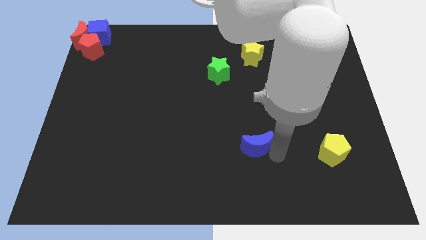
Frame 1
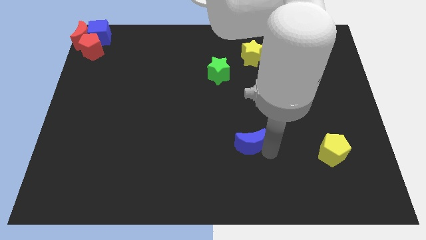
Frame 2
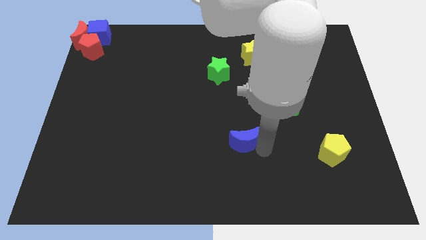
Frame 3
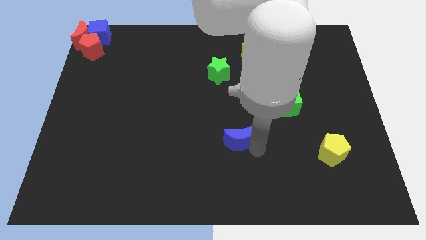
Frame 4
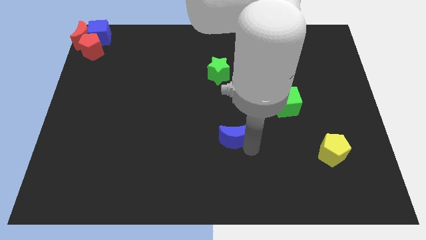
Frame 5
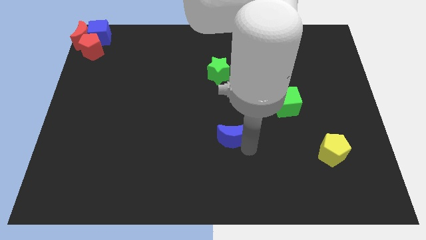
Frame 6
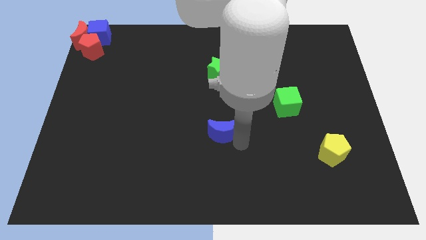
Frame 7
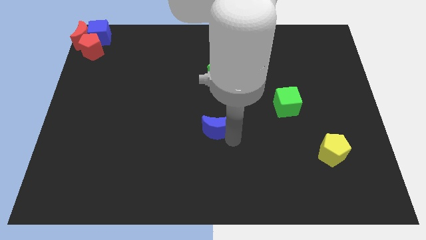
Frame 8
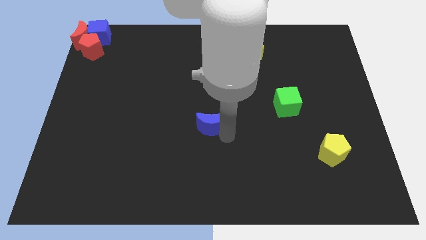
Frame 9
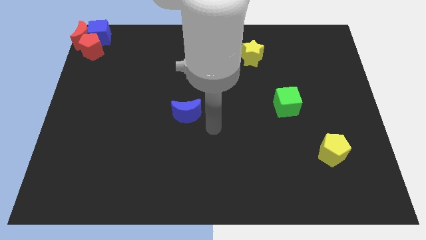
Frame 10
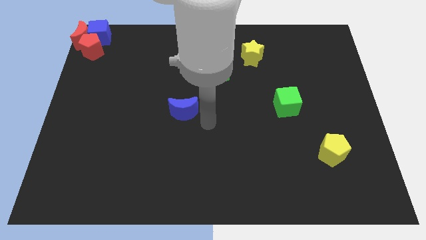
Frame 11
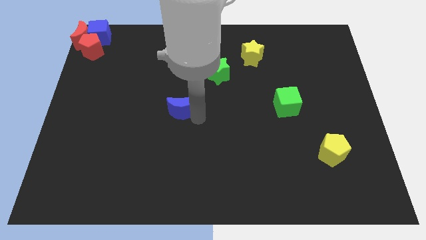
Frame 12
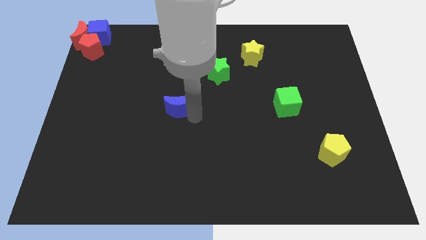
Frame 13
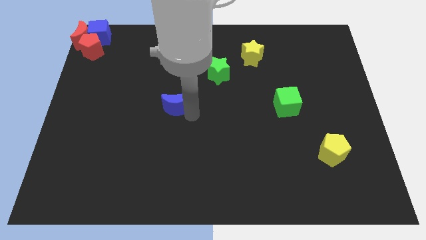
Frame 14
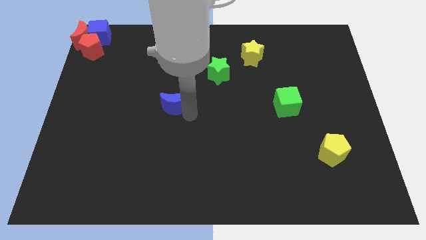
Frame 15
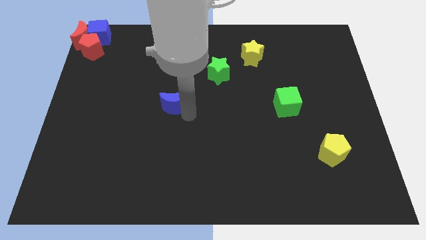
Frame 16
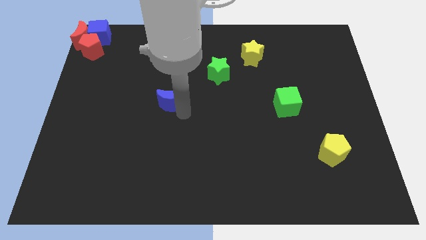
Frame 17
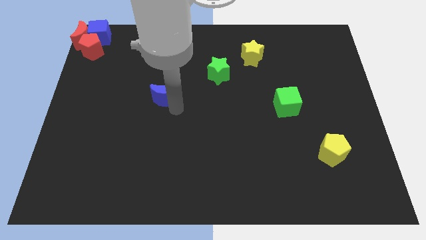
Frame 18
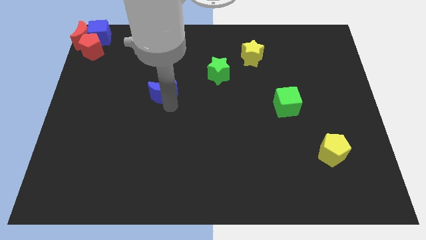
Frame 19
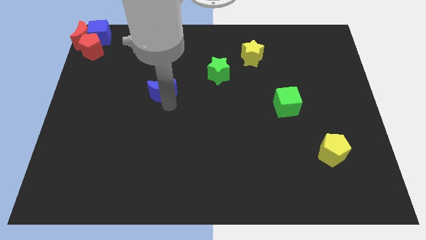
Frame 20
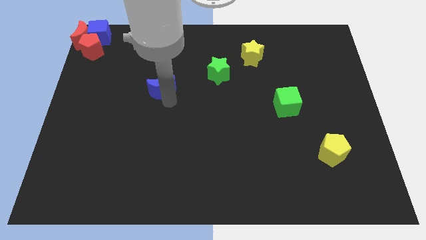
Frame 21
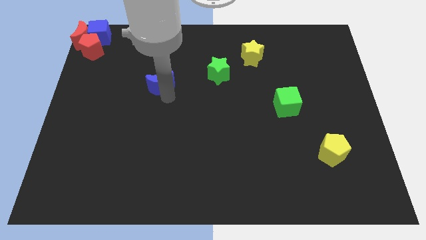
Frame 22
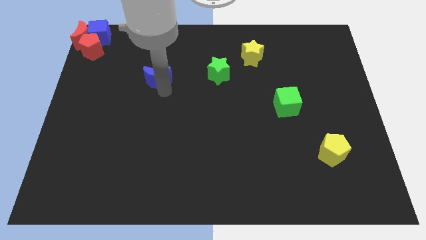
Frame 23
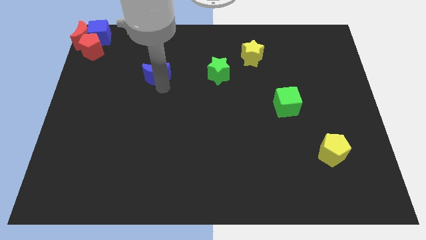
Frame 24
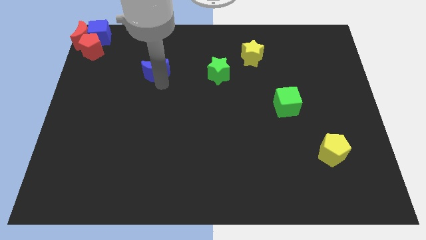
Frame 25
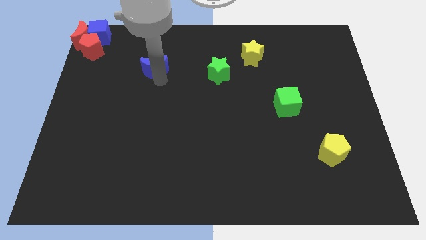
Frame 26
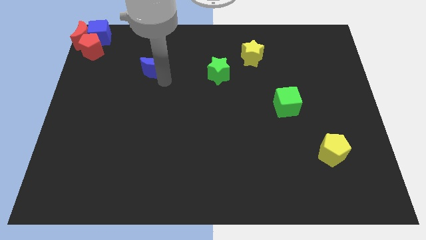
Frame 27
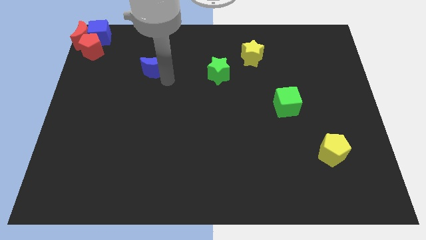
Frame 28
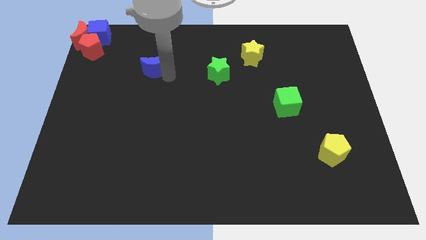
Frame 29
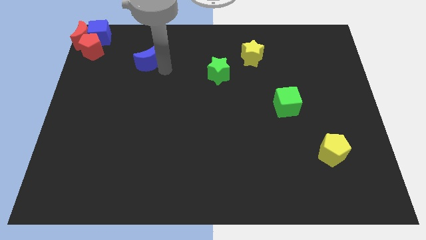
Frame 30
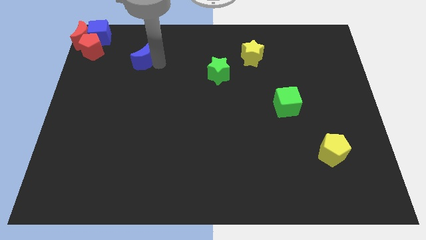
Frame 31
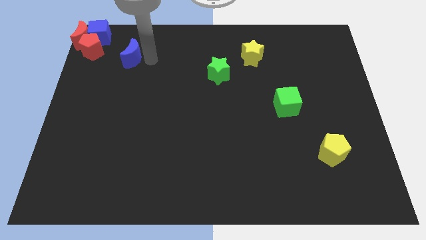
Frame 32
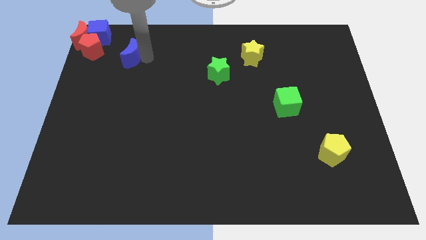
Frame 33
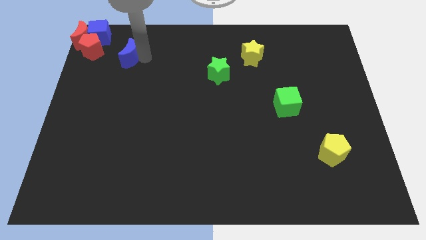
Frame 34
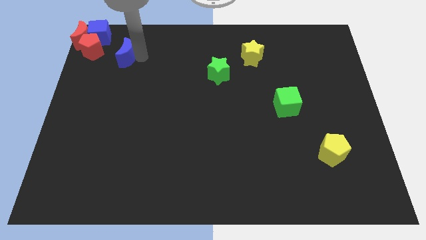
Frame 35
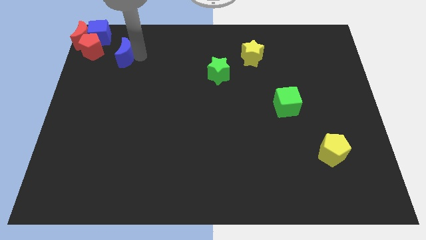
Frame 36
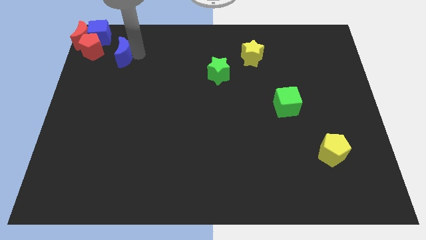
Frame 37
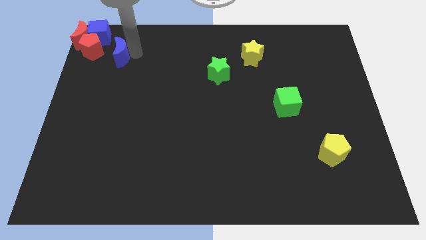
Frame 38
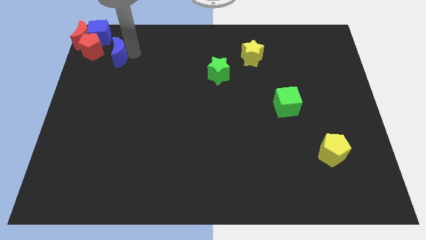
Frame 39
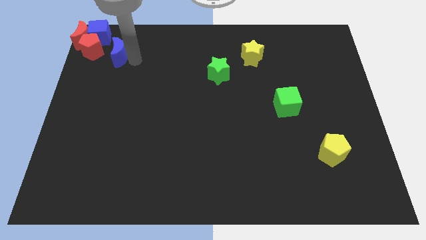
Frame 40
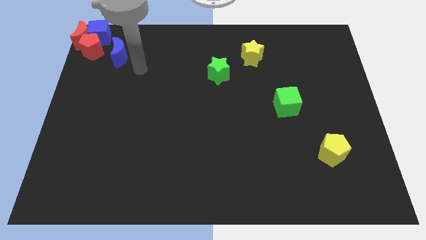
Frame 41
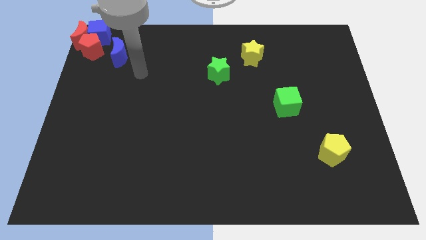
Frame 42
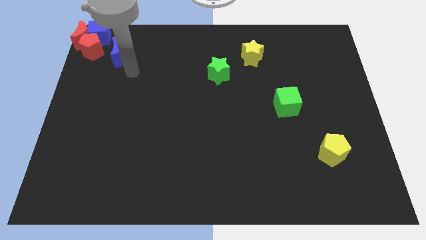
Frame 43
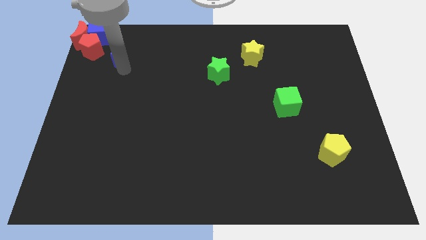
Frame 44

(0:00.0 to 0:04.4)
push the blue crescent to the top left corner of the board

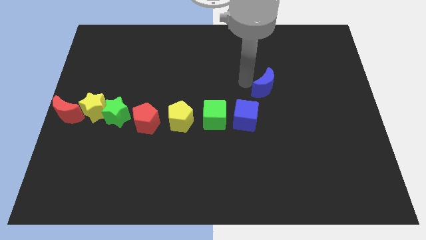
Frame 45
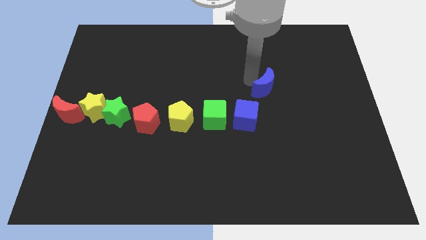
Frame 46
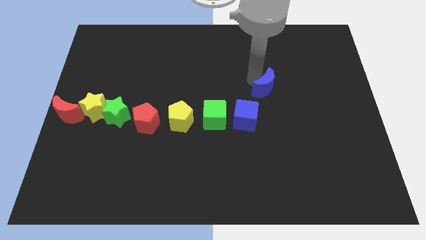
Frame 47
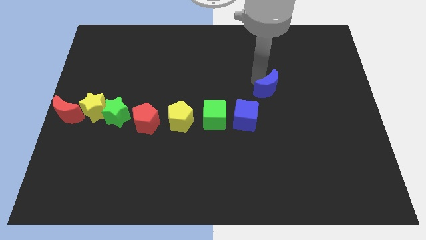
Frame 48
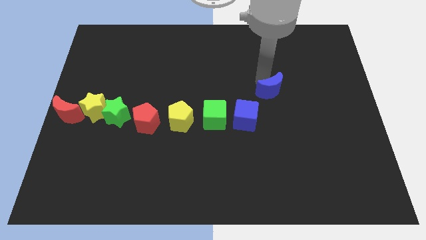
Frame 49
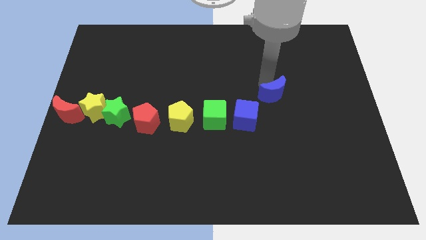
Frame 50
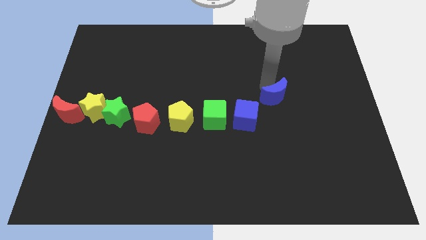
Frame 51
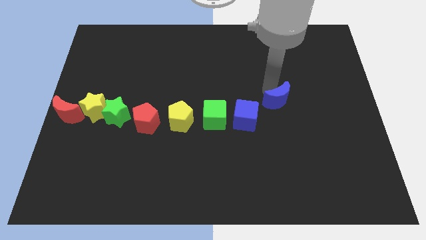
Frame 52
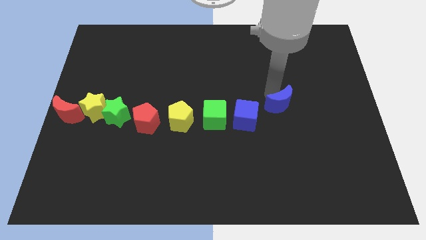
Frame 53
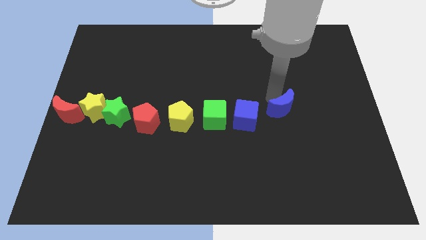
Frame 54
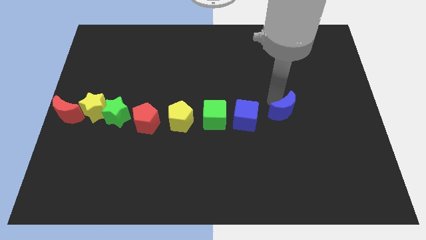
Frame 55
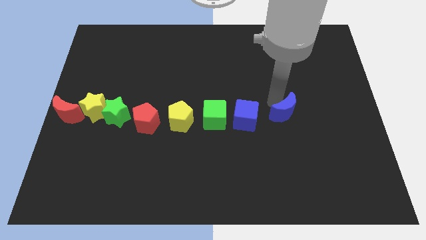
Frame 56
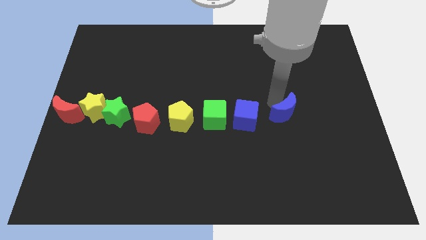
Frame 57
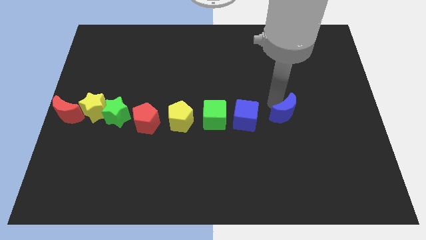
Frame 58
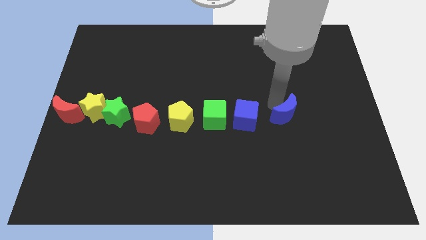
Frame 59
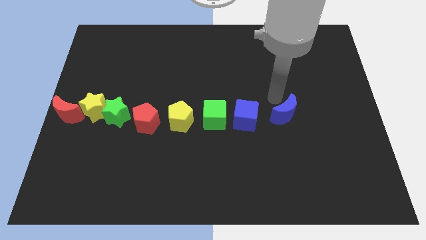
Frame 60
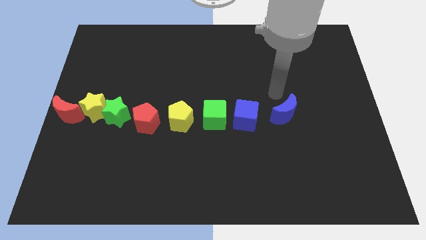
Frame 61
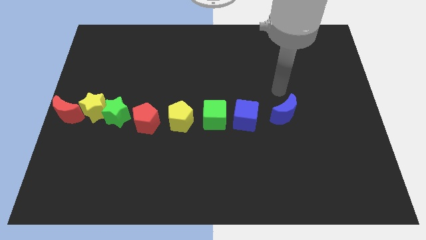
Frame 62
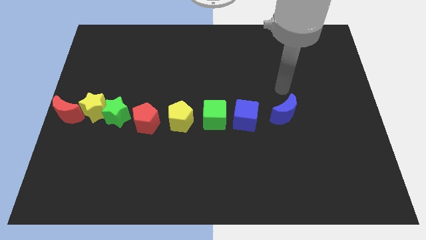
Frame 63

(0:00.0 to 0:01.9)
place the blue moon to the center right of blue cube

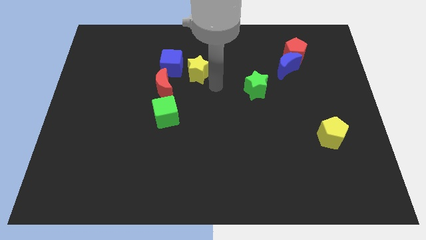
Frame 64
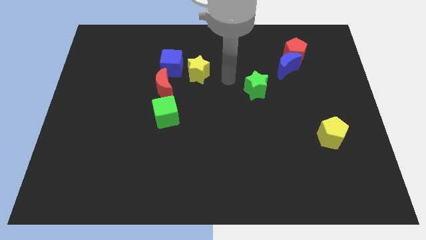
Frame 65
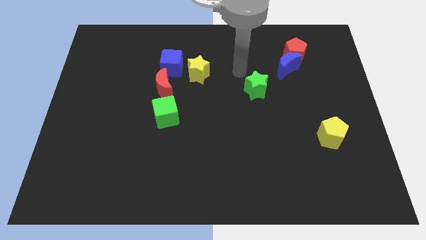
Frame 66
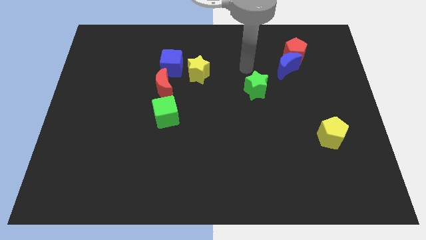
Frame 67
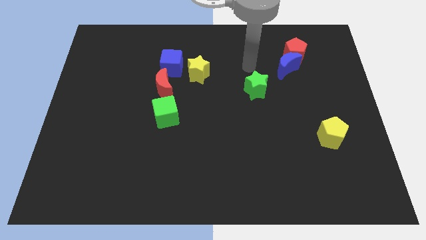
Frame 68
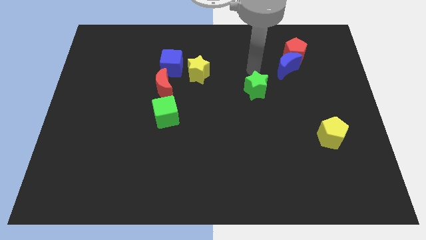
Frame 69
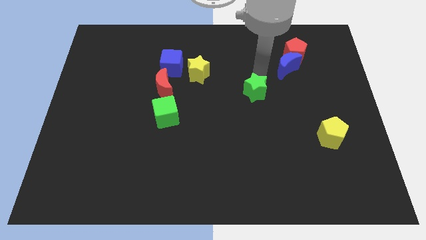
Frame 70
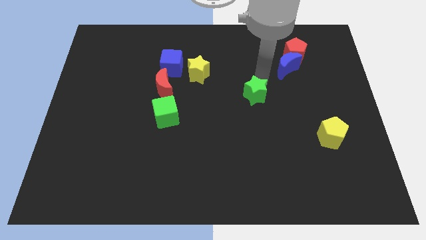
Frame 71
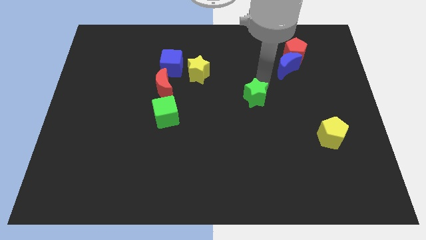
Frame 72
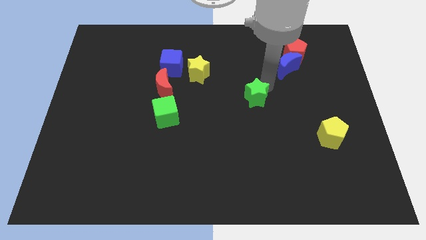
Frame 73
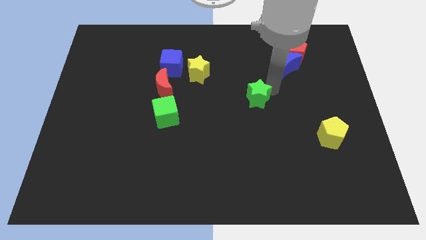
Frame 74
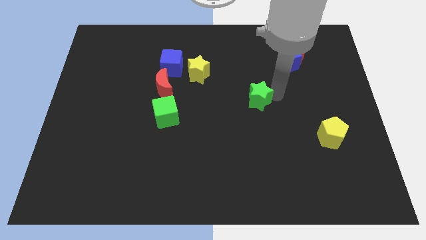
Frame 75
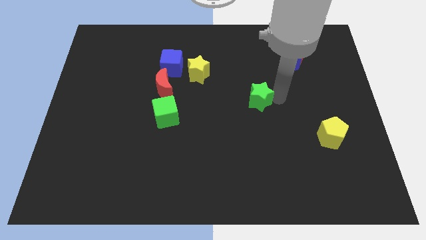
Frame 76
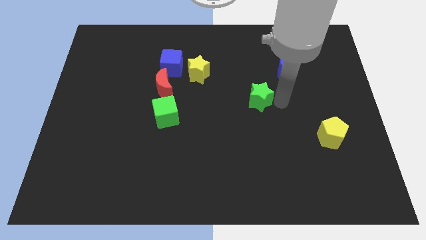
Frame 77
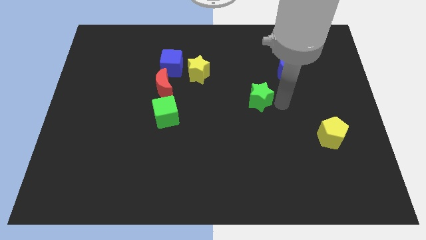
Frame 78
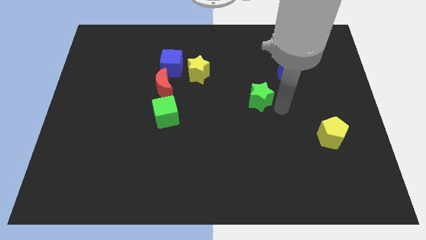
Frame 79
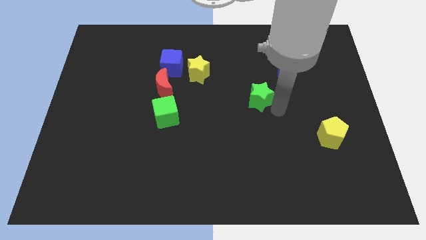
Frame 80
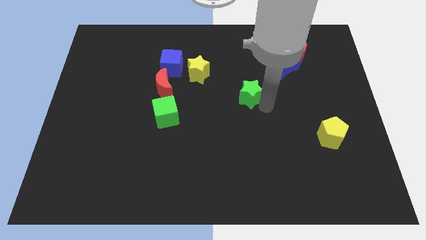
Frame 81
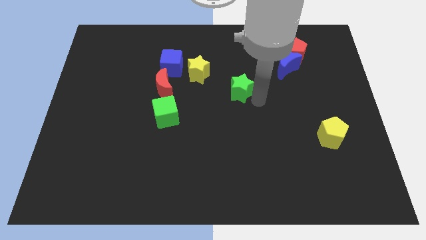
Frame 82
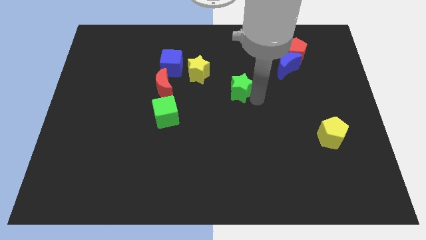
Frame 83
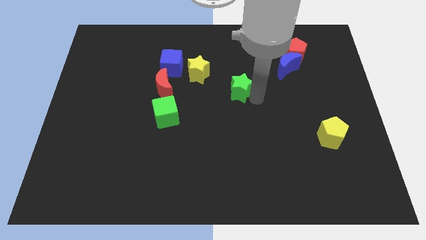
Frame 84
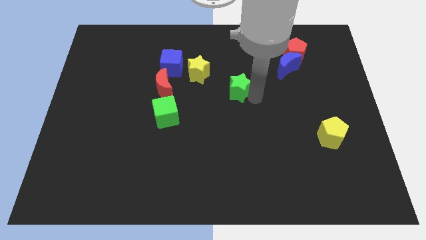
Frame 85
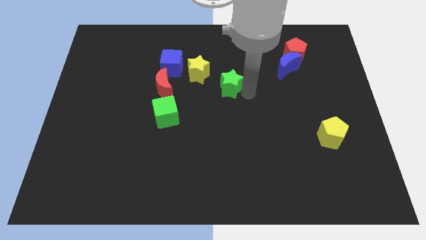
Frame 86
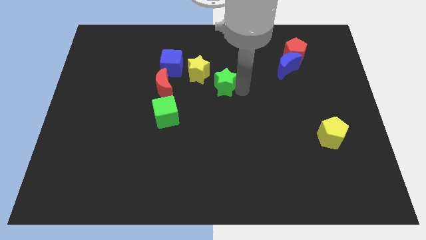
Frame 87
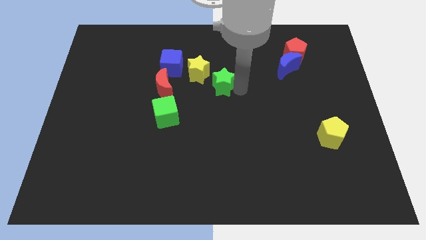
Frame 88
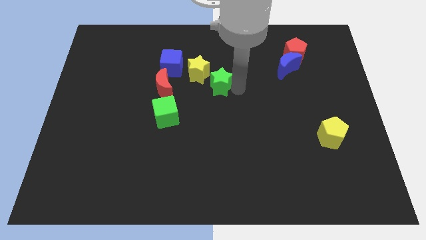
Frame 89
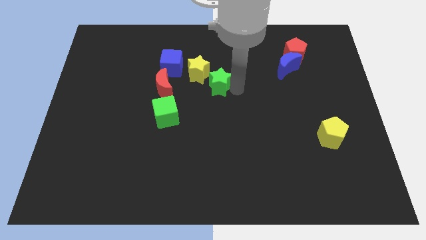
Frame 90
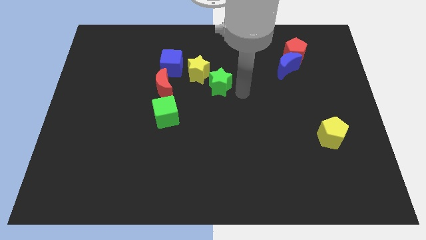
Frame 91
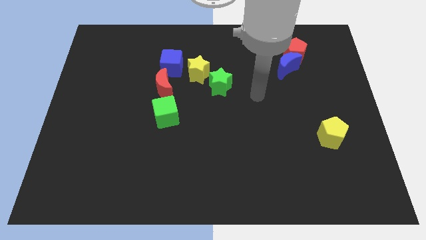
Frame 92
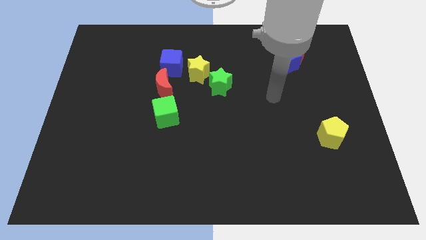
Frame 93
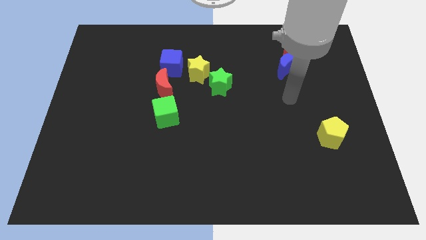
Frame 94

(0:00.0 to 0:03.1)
move green star towards the yellow star
